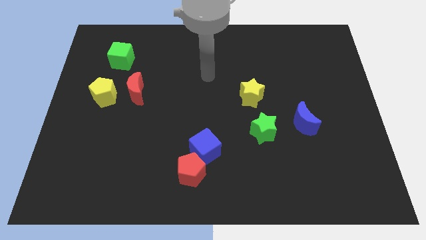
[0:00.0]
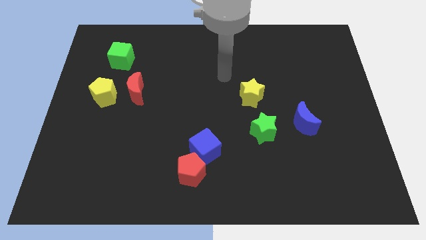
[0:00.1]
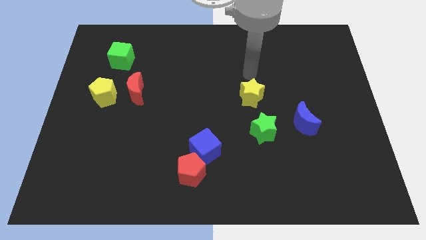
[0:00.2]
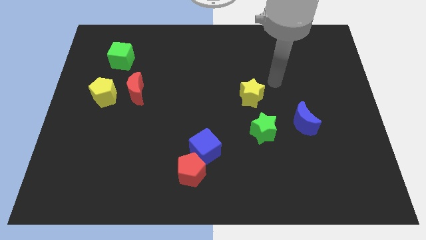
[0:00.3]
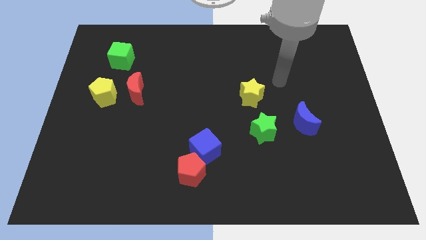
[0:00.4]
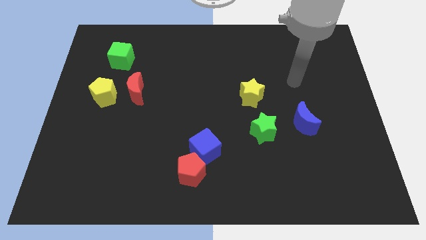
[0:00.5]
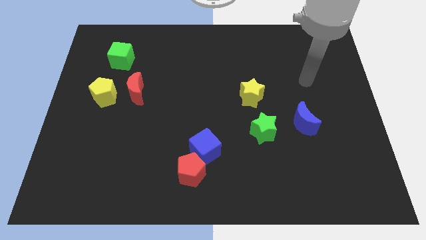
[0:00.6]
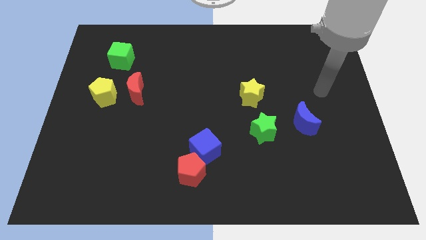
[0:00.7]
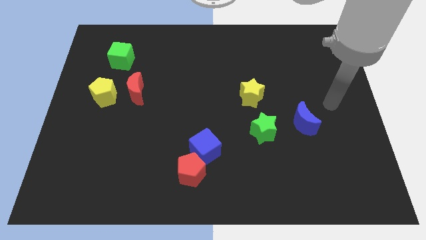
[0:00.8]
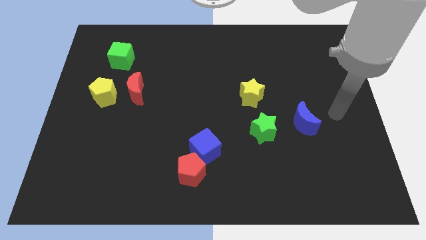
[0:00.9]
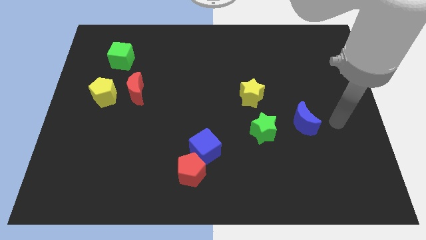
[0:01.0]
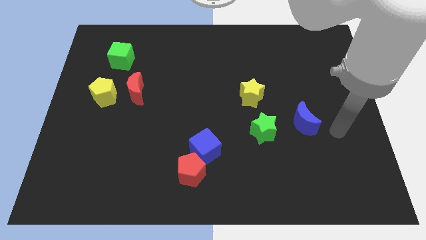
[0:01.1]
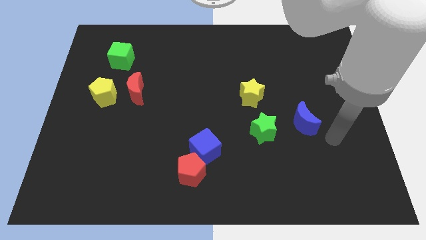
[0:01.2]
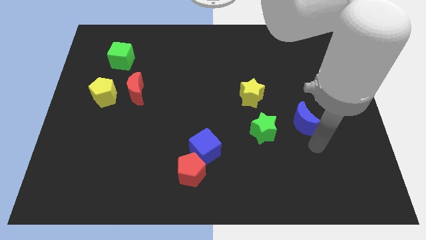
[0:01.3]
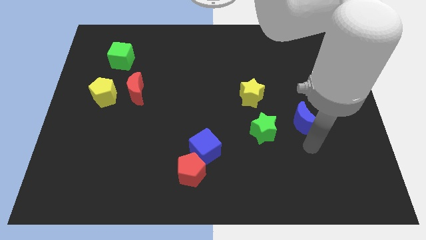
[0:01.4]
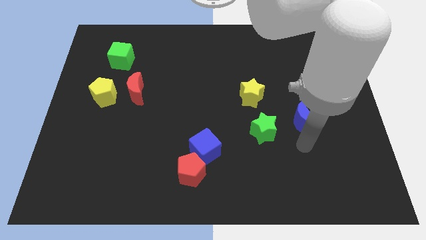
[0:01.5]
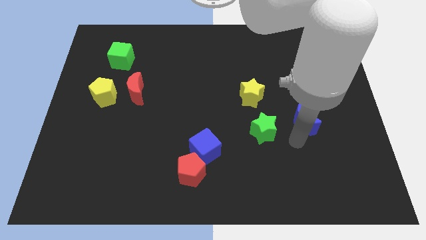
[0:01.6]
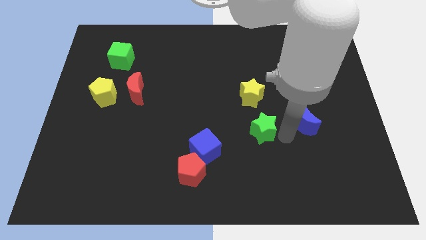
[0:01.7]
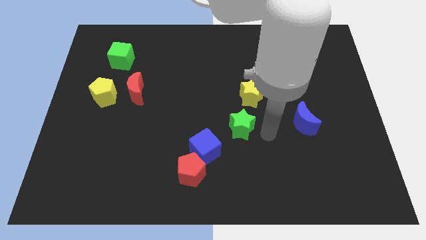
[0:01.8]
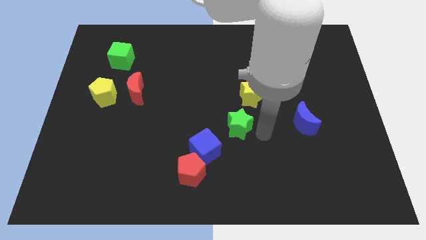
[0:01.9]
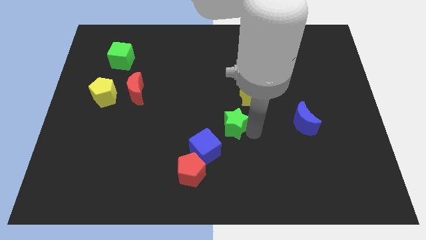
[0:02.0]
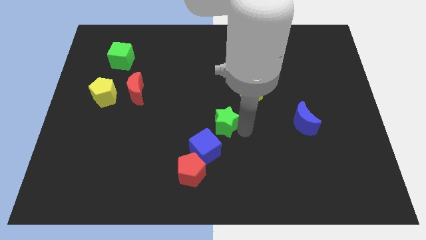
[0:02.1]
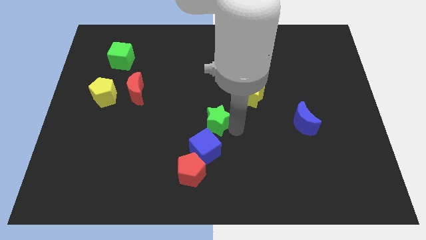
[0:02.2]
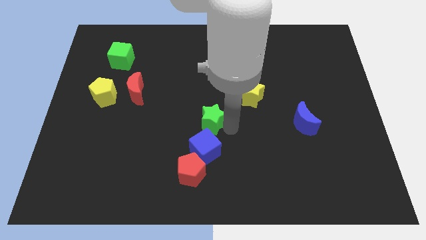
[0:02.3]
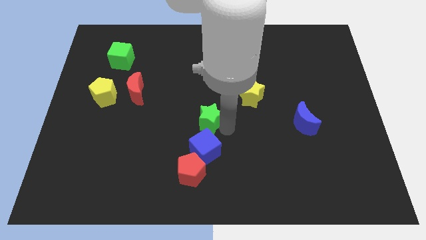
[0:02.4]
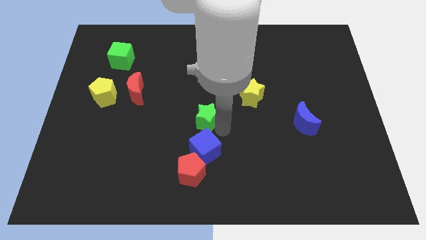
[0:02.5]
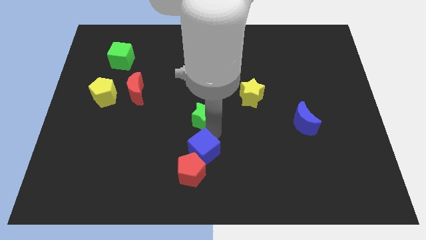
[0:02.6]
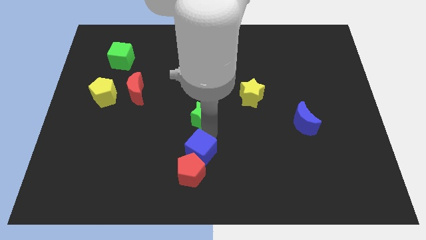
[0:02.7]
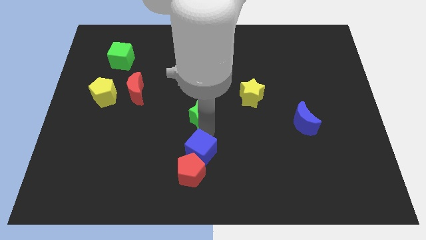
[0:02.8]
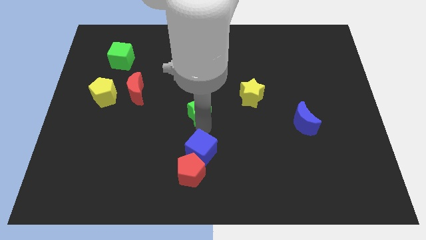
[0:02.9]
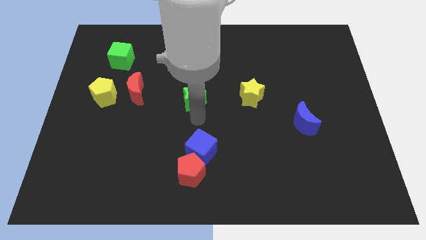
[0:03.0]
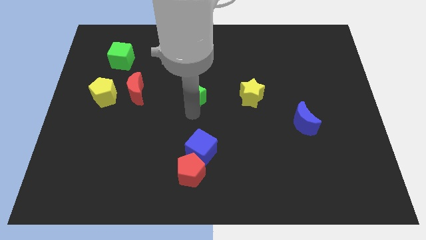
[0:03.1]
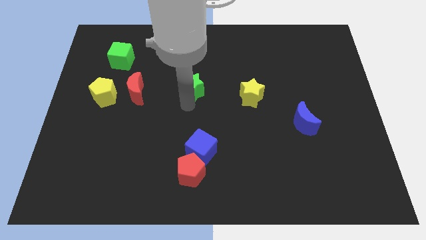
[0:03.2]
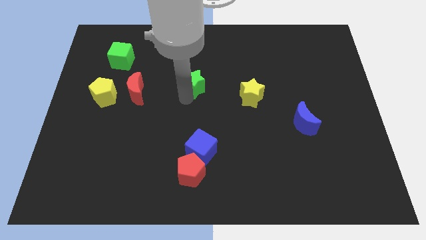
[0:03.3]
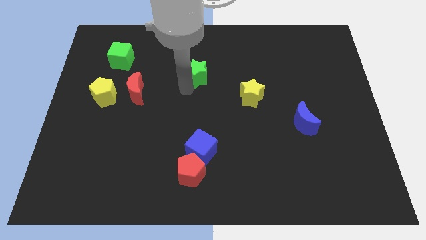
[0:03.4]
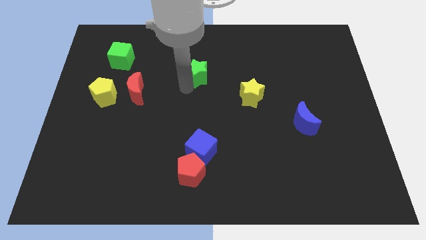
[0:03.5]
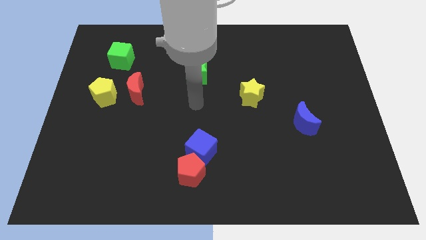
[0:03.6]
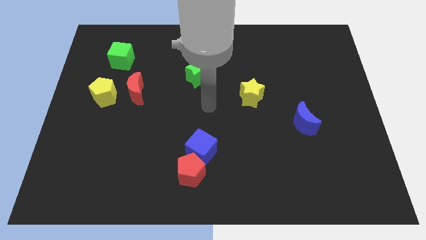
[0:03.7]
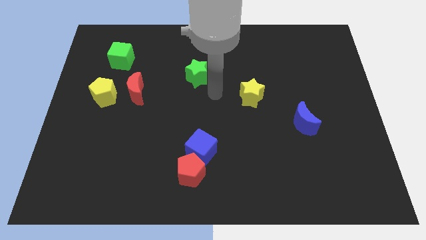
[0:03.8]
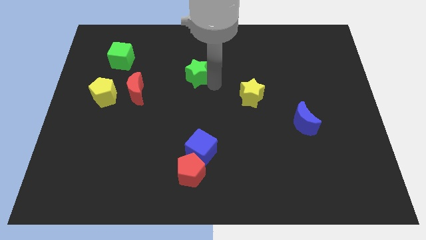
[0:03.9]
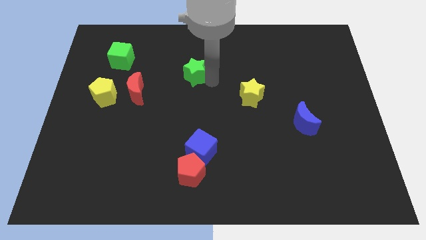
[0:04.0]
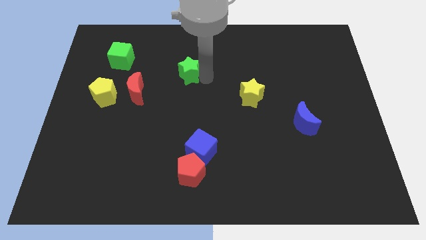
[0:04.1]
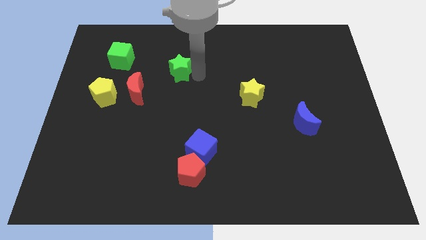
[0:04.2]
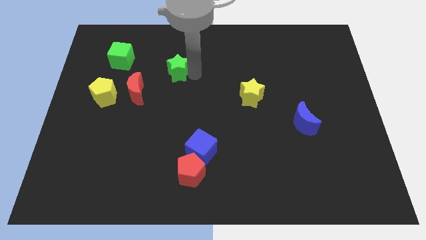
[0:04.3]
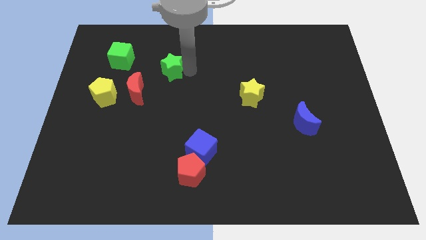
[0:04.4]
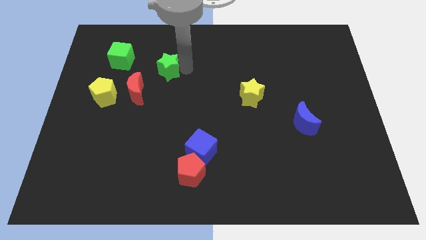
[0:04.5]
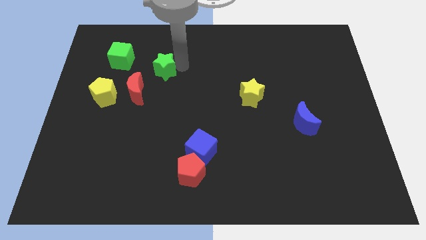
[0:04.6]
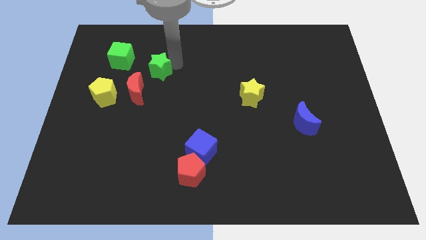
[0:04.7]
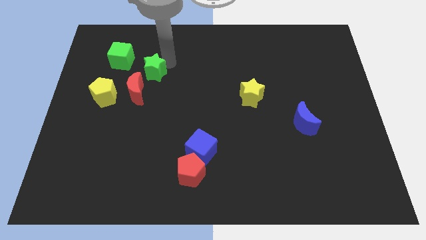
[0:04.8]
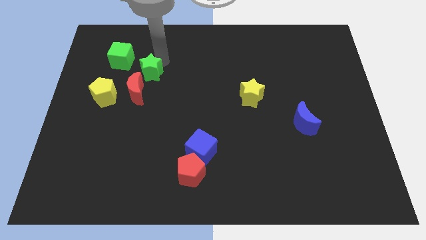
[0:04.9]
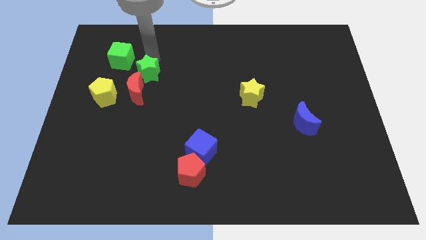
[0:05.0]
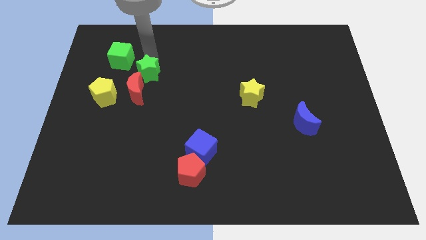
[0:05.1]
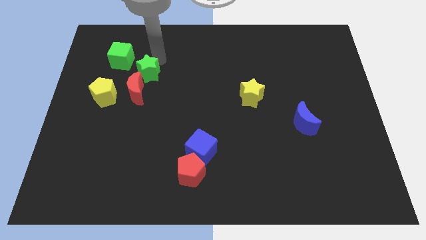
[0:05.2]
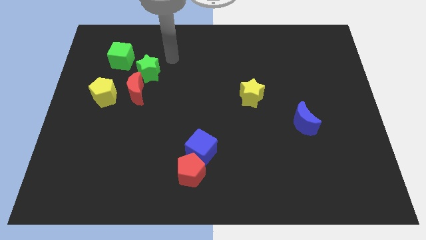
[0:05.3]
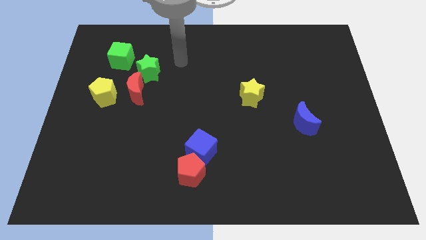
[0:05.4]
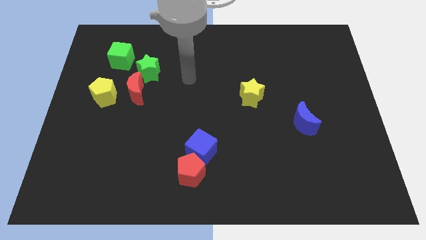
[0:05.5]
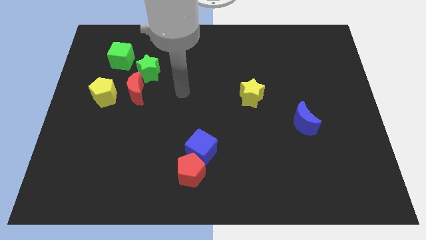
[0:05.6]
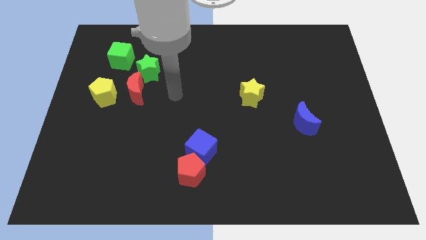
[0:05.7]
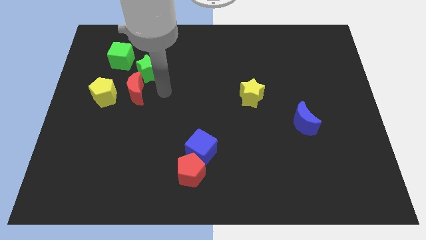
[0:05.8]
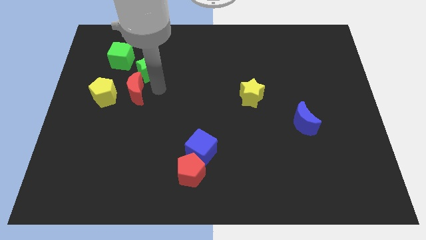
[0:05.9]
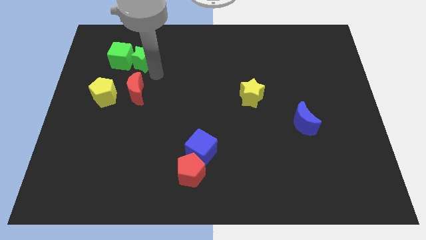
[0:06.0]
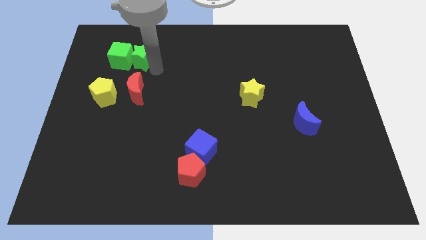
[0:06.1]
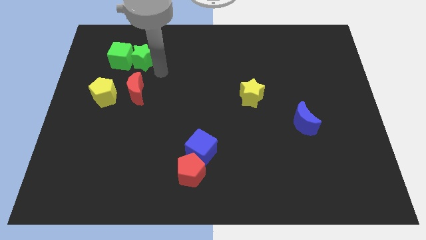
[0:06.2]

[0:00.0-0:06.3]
put the green star close to the green cube

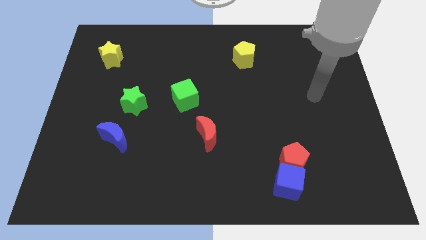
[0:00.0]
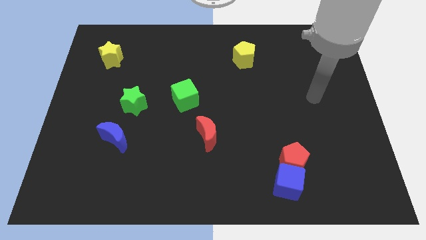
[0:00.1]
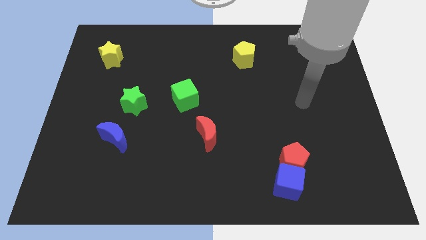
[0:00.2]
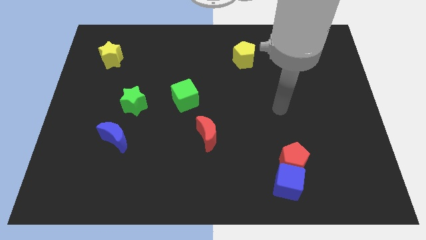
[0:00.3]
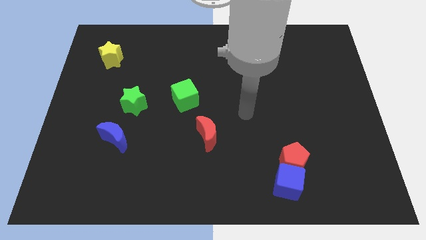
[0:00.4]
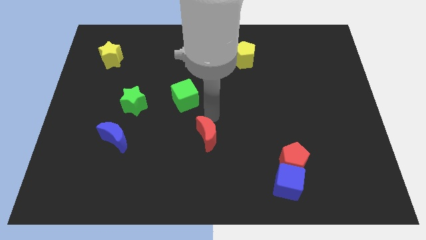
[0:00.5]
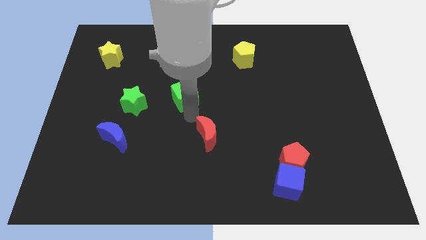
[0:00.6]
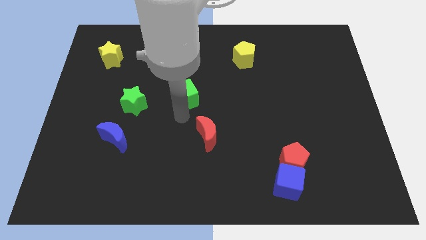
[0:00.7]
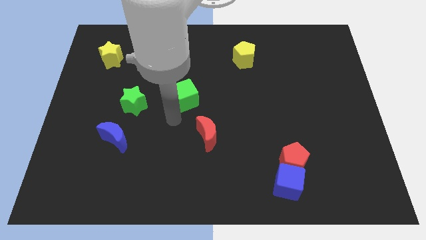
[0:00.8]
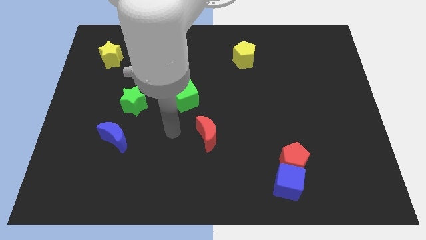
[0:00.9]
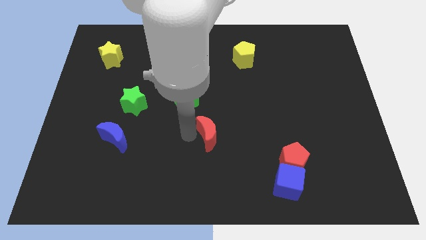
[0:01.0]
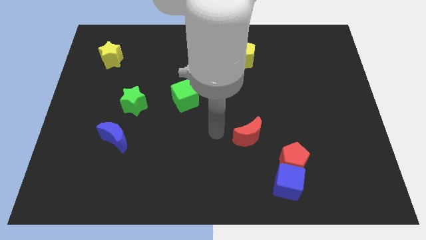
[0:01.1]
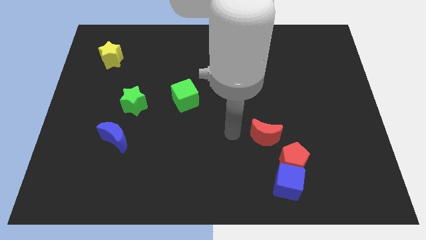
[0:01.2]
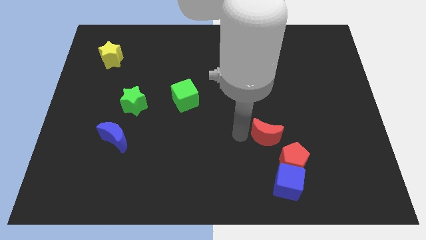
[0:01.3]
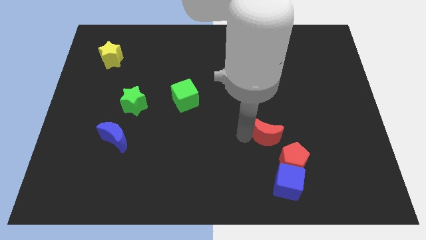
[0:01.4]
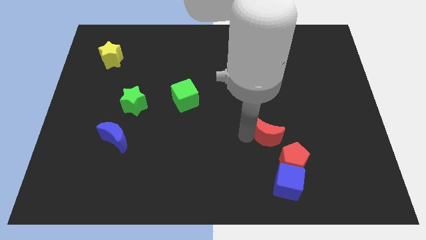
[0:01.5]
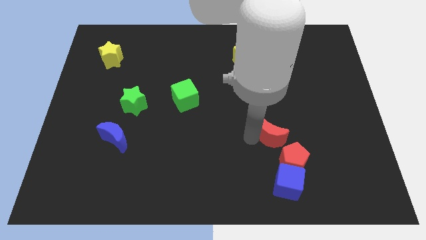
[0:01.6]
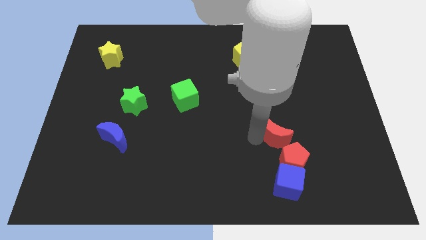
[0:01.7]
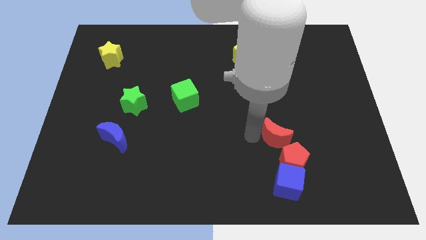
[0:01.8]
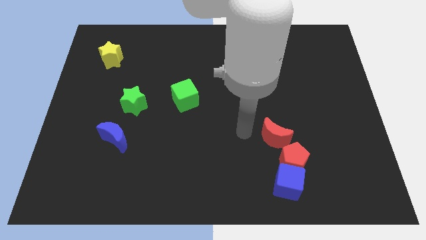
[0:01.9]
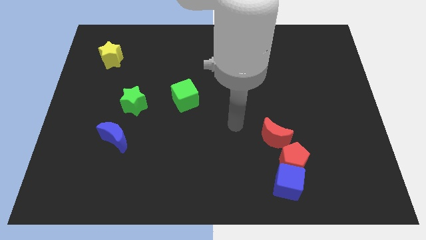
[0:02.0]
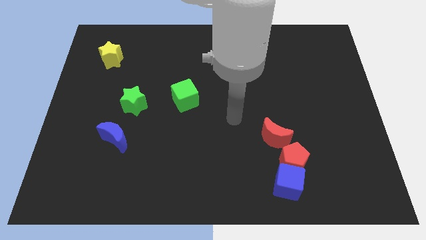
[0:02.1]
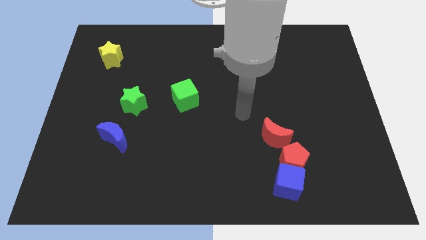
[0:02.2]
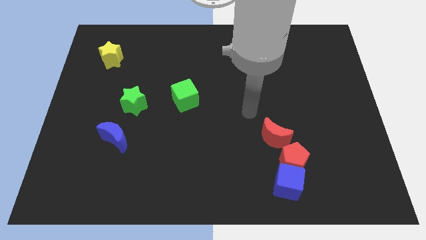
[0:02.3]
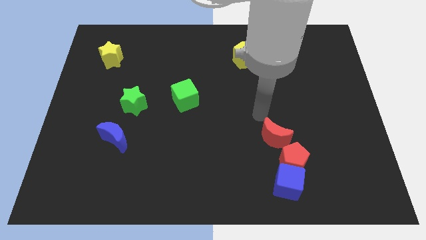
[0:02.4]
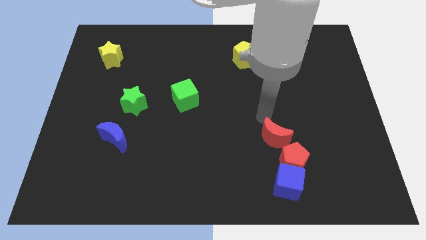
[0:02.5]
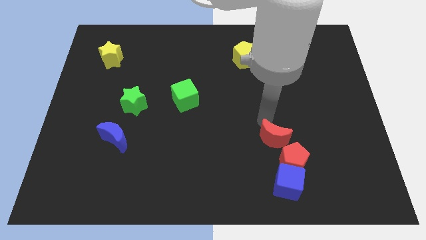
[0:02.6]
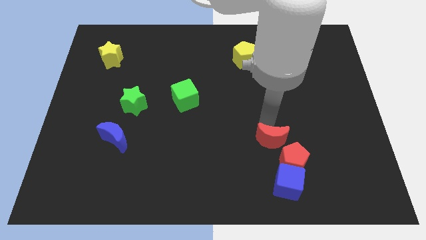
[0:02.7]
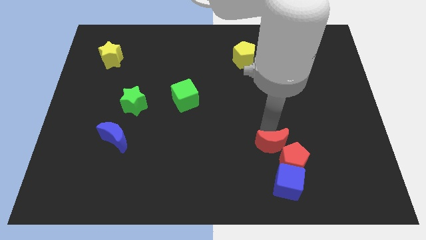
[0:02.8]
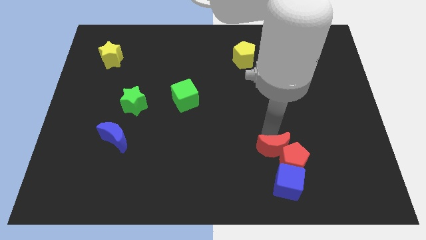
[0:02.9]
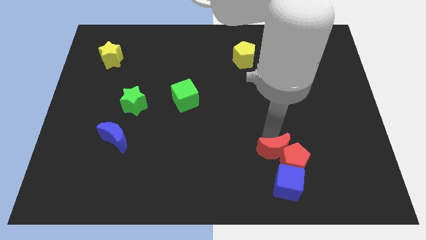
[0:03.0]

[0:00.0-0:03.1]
move the red moon to the red pentagon
